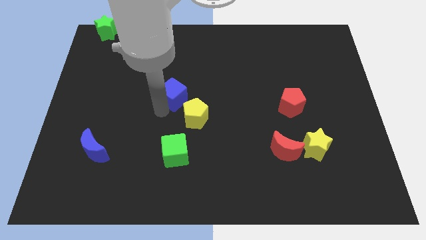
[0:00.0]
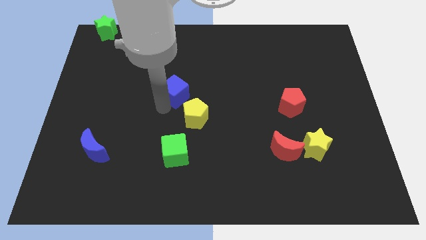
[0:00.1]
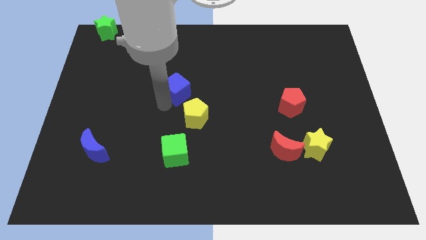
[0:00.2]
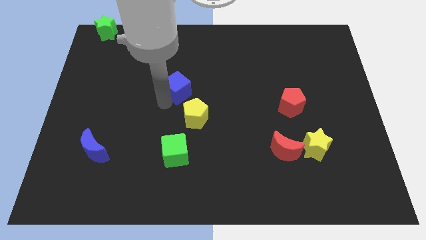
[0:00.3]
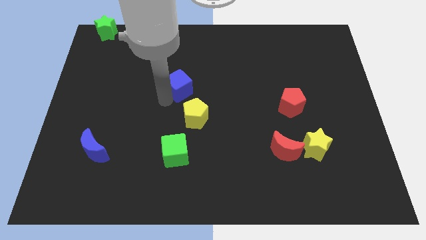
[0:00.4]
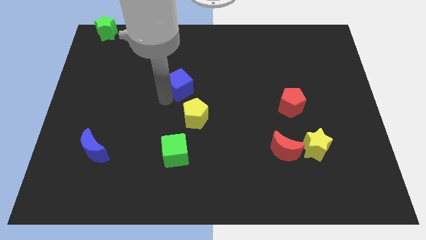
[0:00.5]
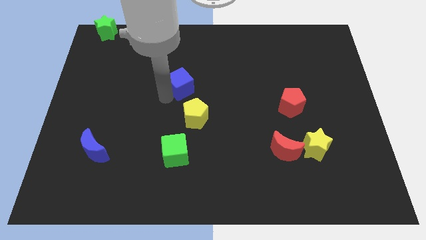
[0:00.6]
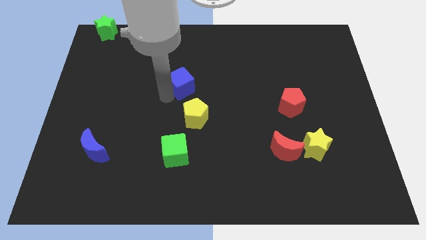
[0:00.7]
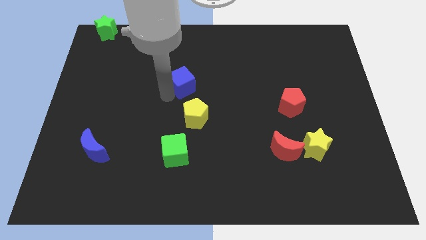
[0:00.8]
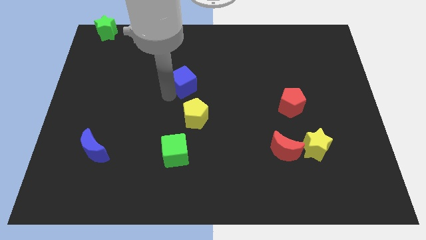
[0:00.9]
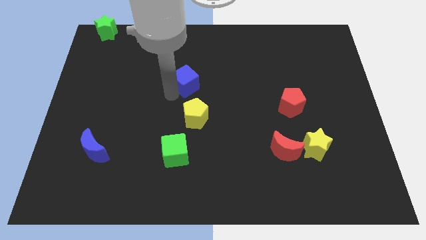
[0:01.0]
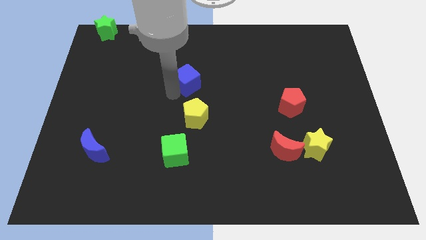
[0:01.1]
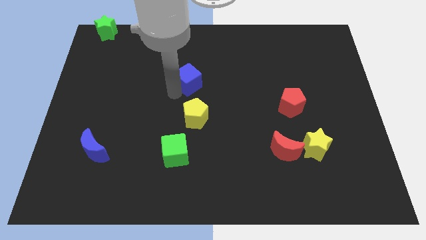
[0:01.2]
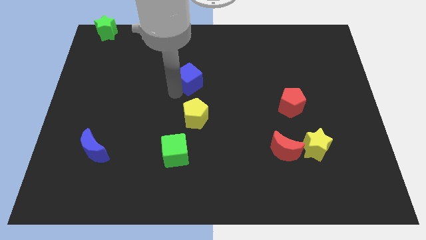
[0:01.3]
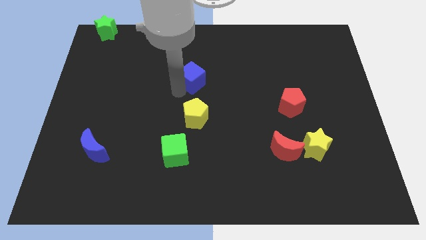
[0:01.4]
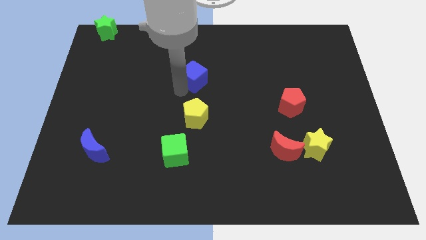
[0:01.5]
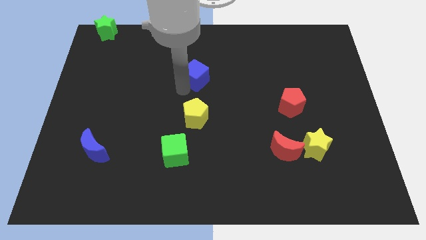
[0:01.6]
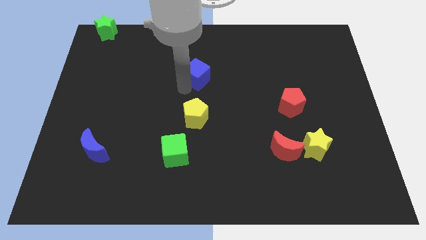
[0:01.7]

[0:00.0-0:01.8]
place the blue cube vertically above the yellow pentagon

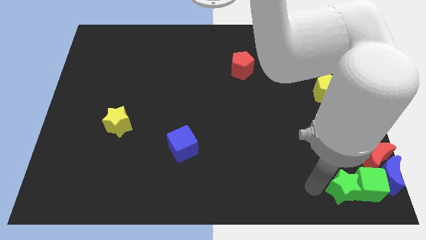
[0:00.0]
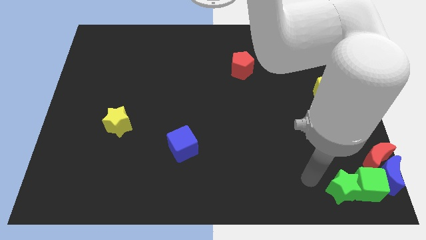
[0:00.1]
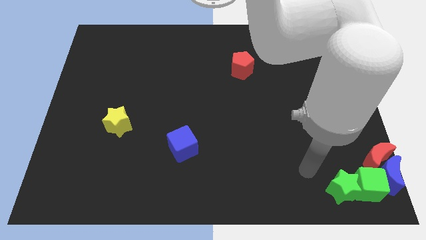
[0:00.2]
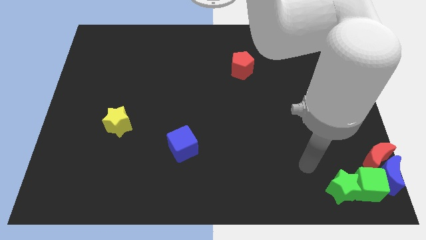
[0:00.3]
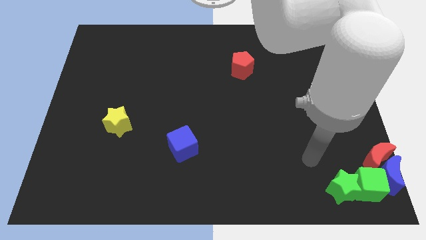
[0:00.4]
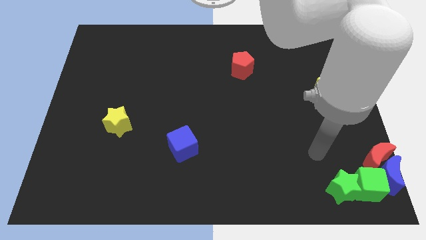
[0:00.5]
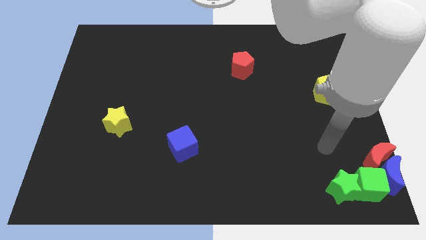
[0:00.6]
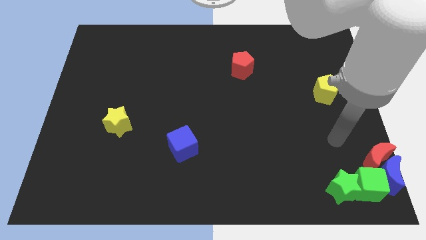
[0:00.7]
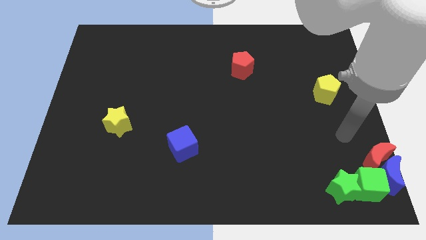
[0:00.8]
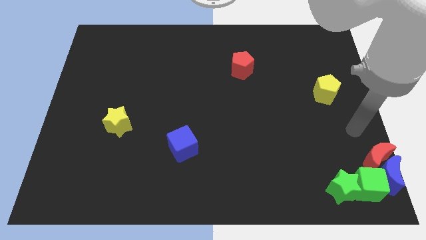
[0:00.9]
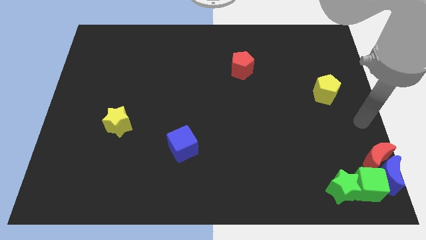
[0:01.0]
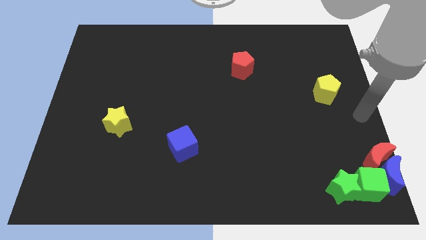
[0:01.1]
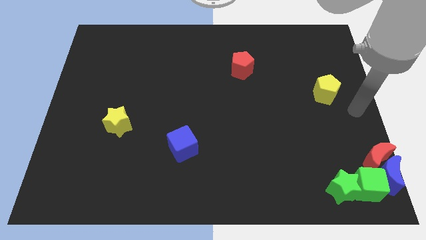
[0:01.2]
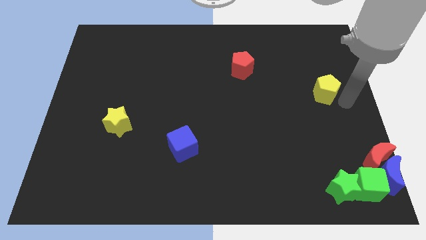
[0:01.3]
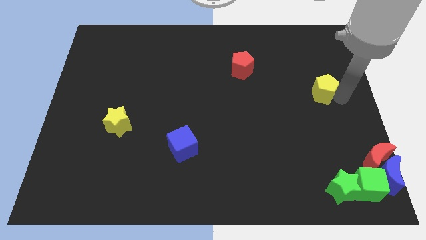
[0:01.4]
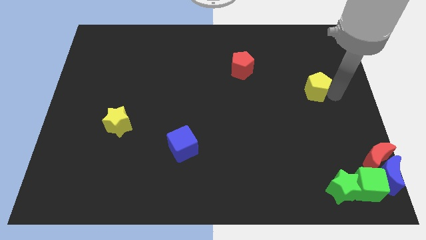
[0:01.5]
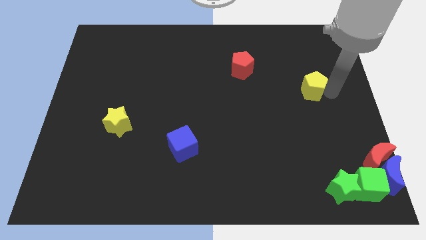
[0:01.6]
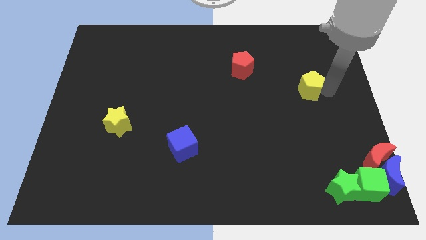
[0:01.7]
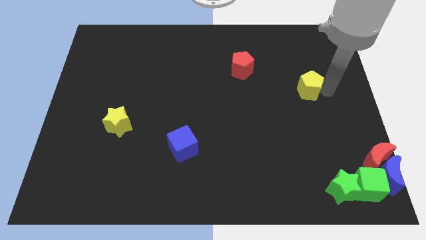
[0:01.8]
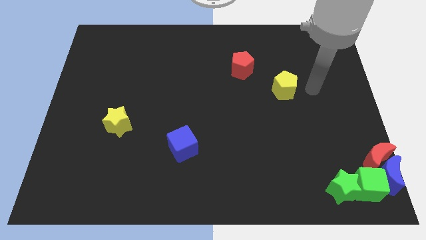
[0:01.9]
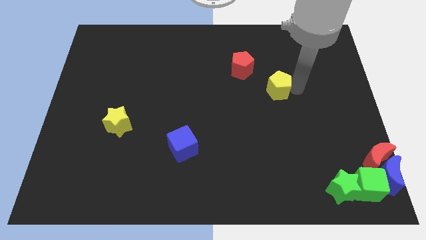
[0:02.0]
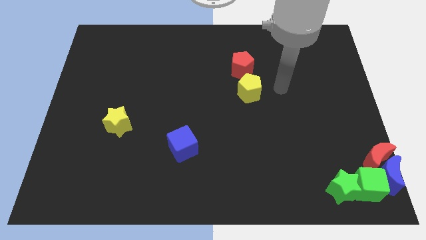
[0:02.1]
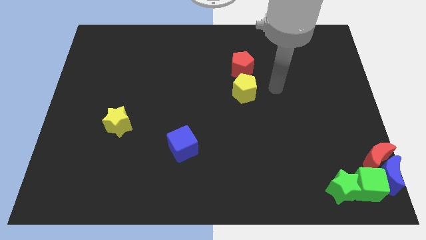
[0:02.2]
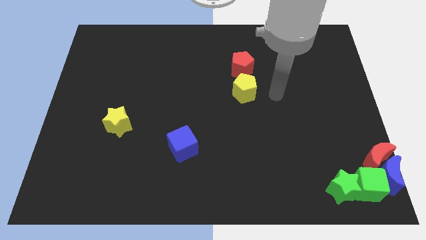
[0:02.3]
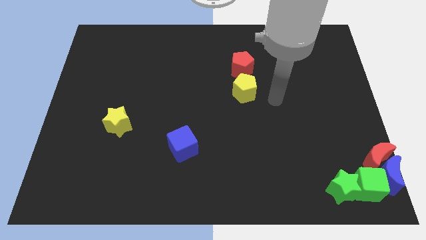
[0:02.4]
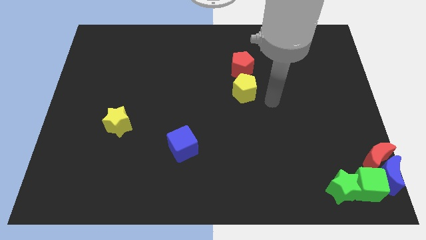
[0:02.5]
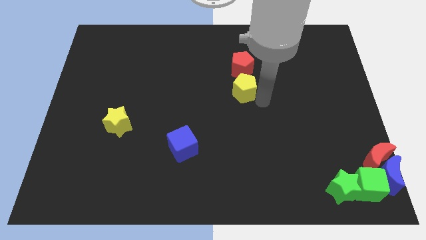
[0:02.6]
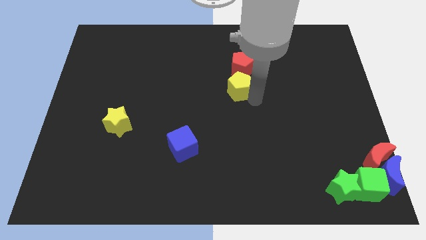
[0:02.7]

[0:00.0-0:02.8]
place yellow pentagon to the bottom of the red pentagon

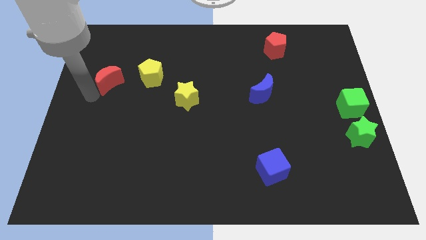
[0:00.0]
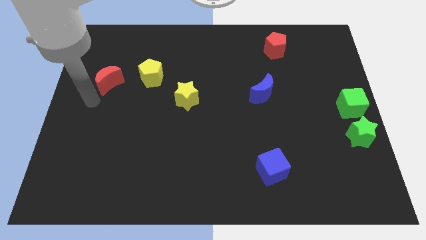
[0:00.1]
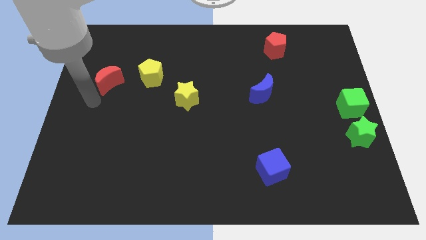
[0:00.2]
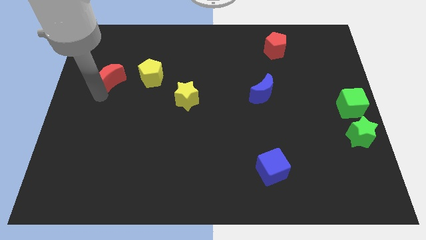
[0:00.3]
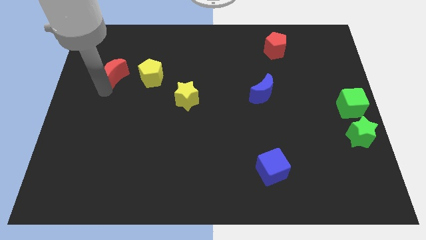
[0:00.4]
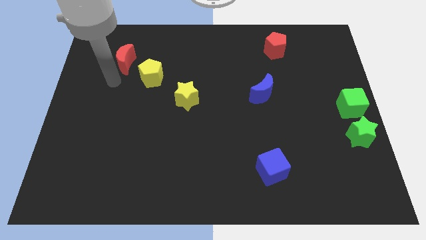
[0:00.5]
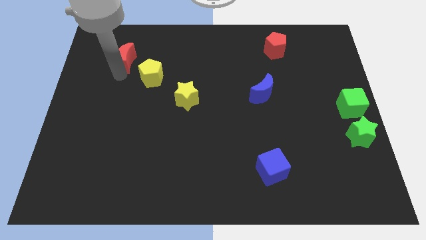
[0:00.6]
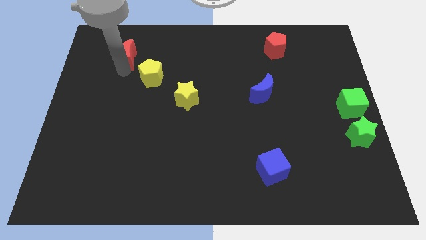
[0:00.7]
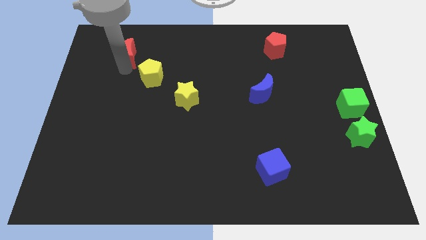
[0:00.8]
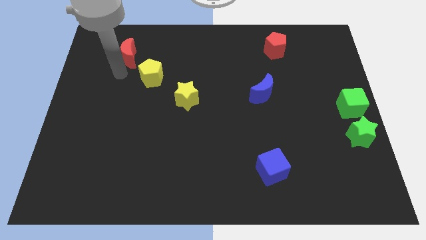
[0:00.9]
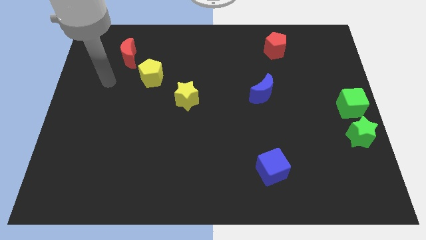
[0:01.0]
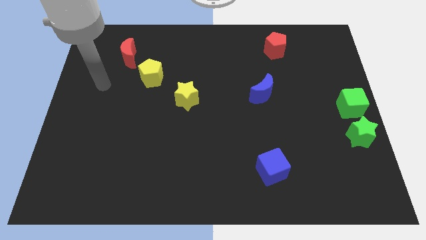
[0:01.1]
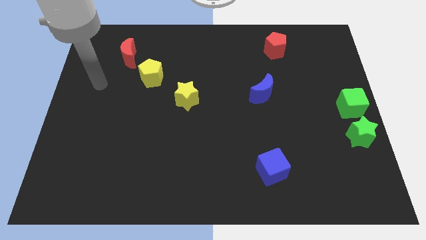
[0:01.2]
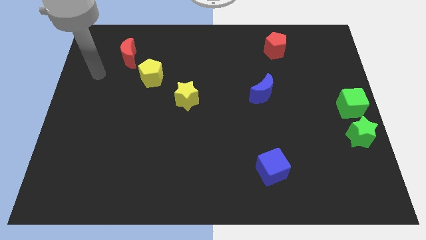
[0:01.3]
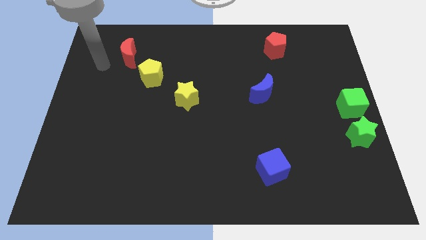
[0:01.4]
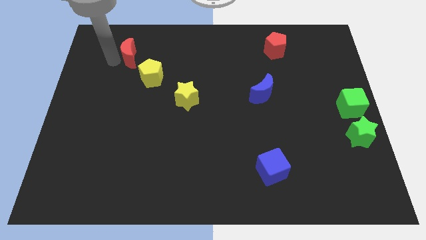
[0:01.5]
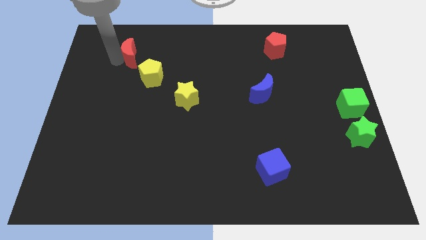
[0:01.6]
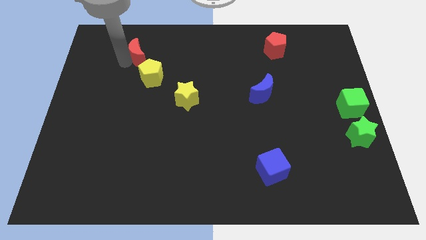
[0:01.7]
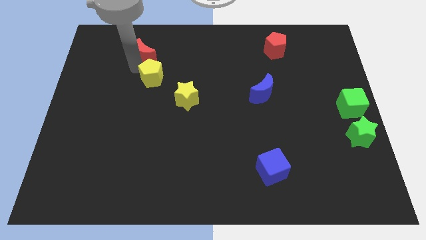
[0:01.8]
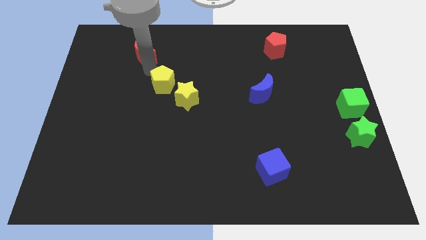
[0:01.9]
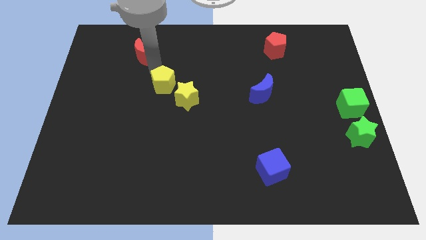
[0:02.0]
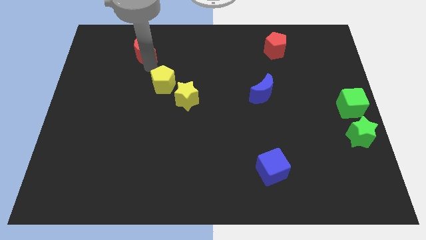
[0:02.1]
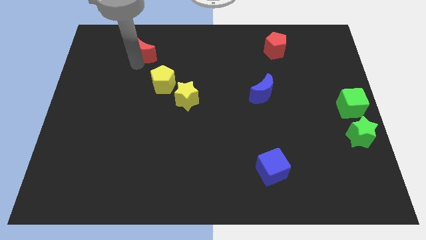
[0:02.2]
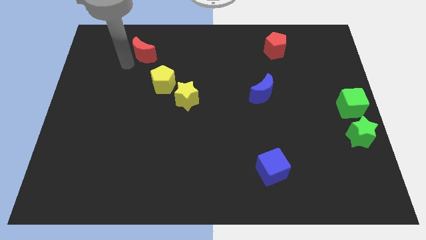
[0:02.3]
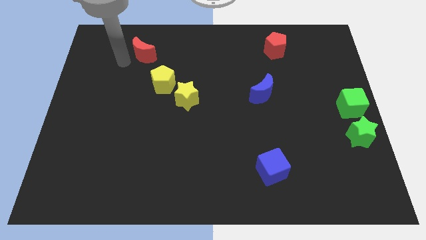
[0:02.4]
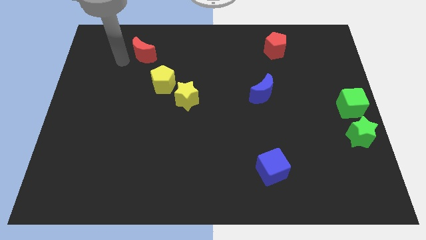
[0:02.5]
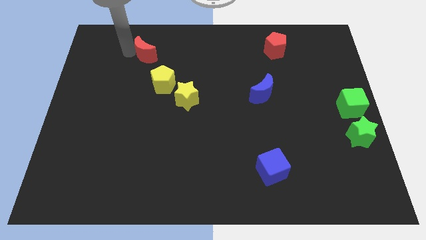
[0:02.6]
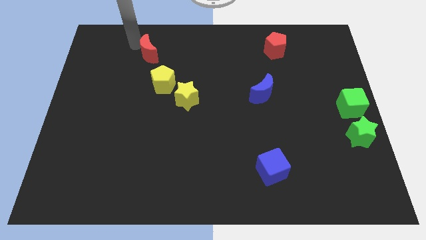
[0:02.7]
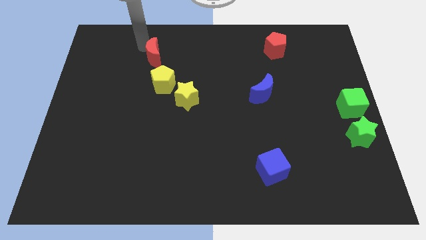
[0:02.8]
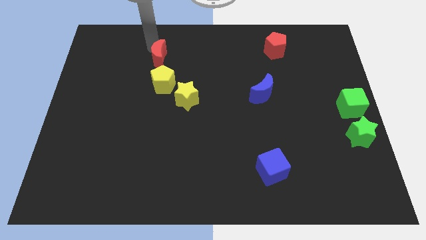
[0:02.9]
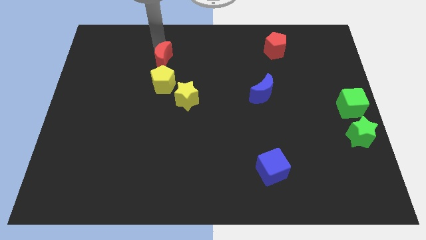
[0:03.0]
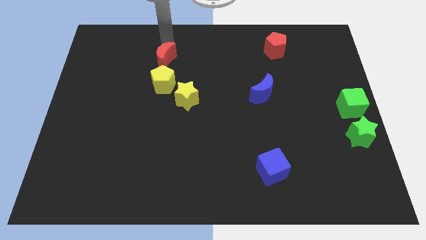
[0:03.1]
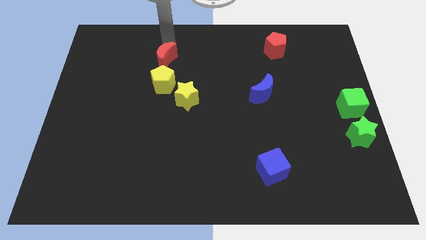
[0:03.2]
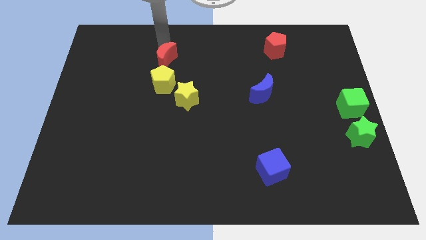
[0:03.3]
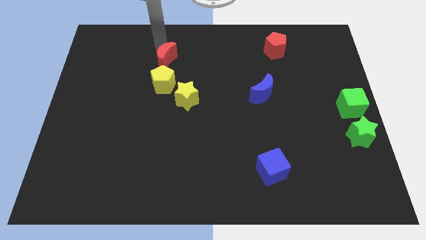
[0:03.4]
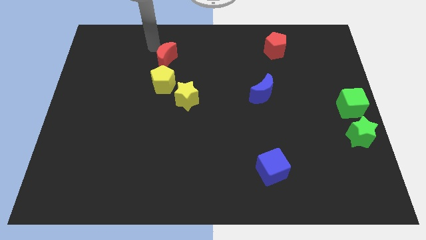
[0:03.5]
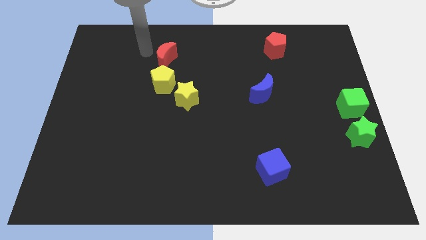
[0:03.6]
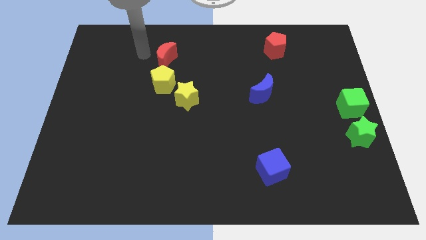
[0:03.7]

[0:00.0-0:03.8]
place red moon above yellow pentagon

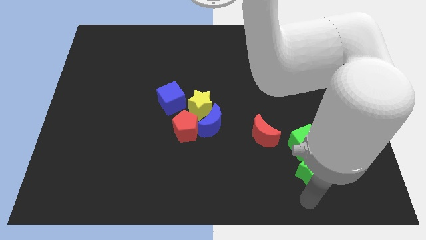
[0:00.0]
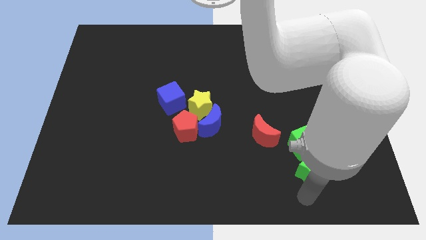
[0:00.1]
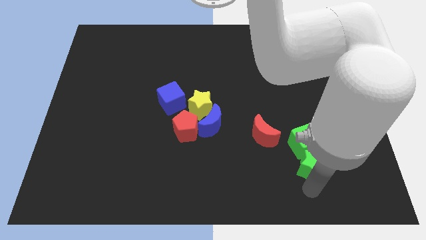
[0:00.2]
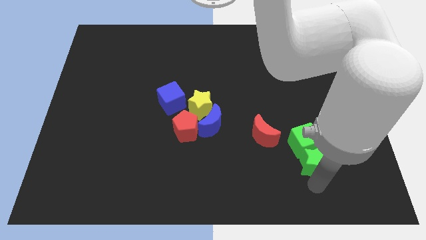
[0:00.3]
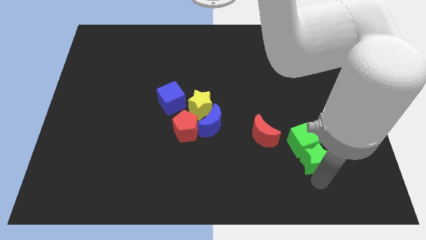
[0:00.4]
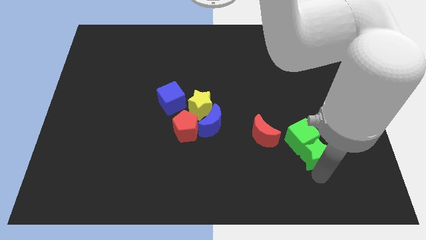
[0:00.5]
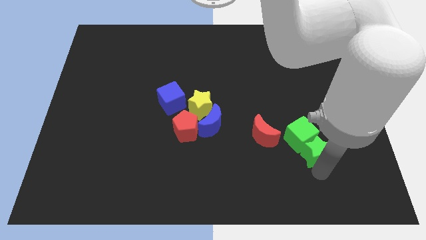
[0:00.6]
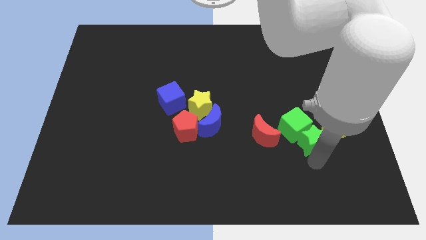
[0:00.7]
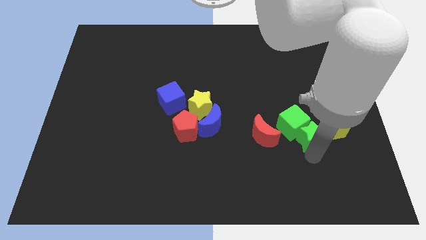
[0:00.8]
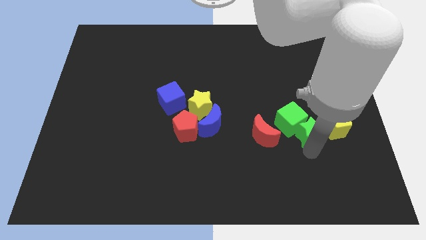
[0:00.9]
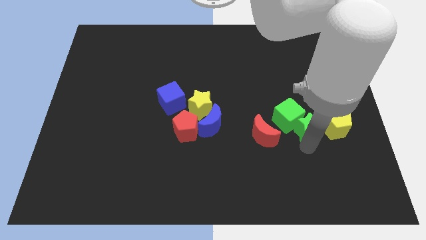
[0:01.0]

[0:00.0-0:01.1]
push green star in to green cube
